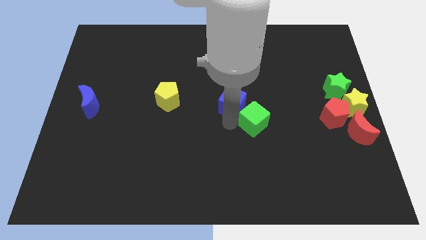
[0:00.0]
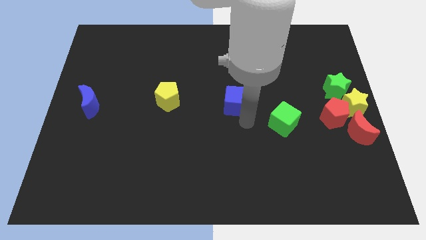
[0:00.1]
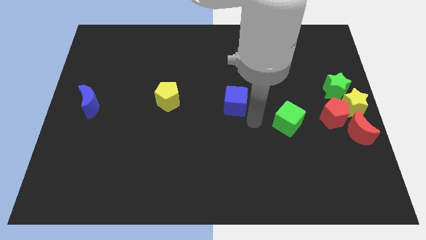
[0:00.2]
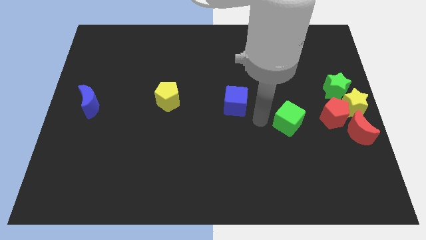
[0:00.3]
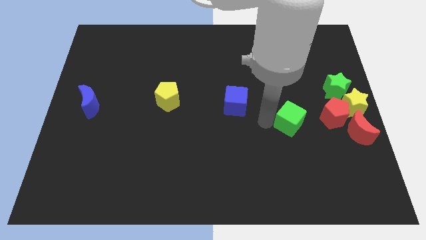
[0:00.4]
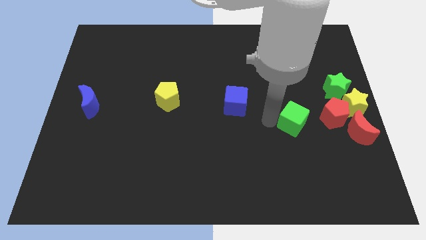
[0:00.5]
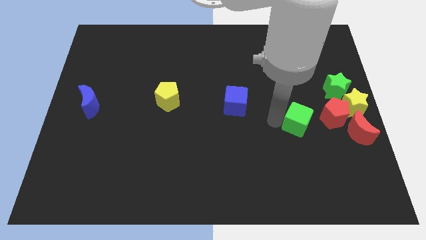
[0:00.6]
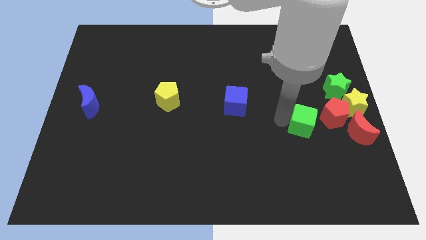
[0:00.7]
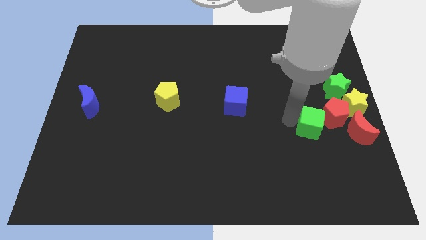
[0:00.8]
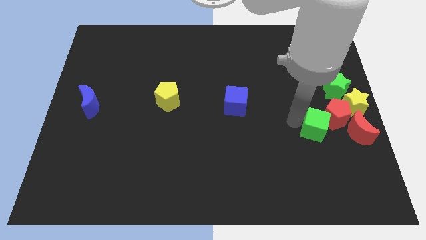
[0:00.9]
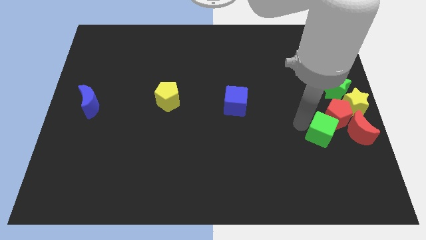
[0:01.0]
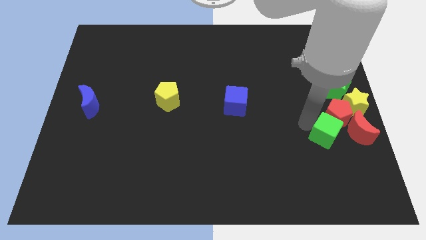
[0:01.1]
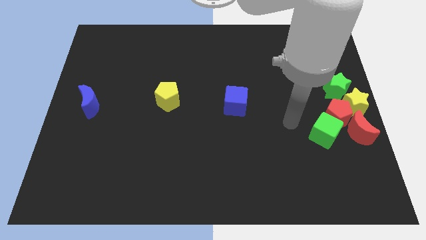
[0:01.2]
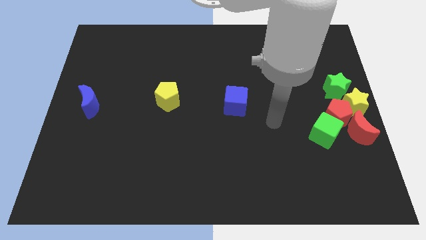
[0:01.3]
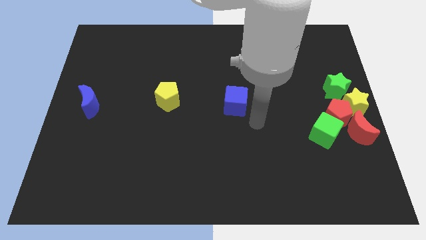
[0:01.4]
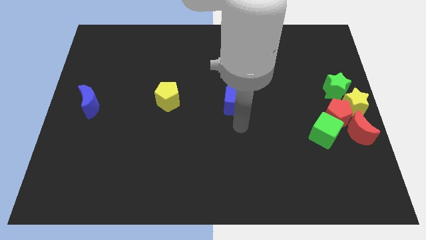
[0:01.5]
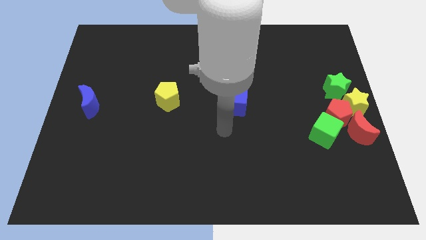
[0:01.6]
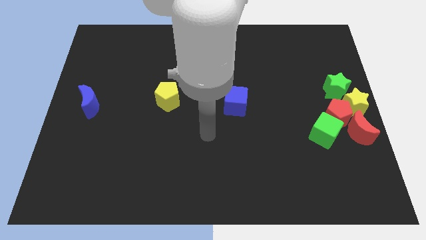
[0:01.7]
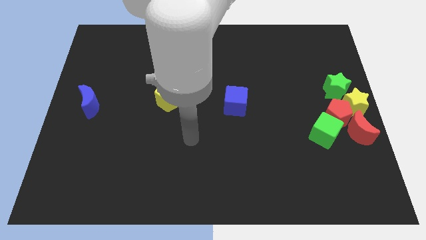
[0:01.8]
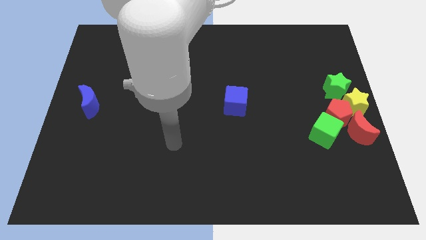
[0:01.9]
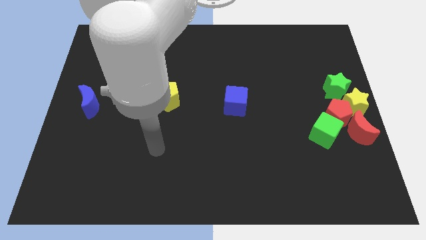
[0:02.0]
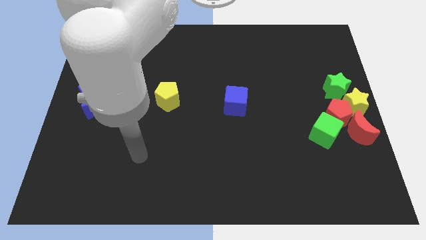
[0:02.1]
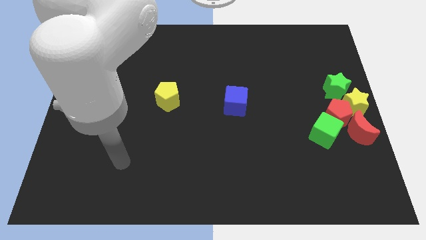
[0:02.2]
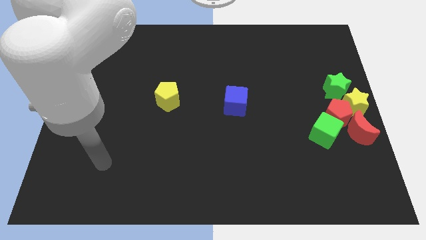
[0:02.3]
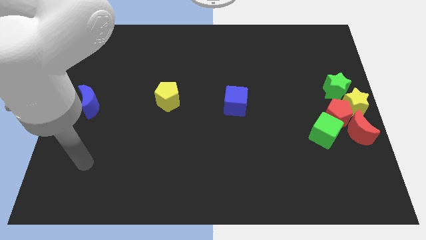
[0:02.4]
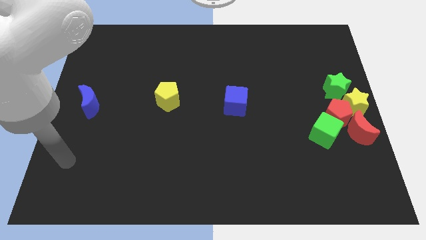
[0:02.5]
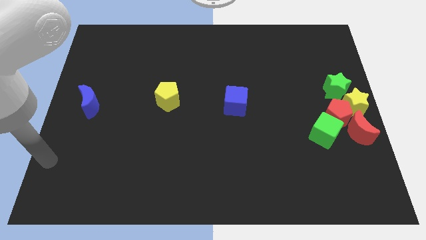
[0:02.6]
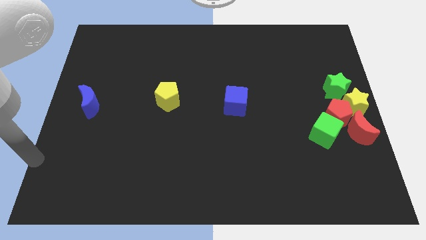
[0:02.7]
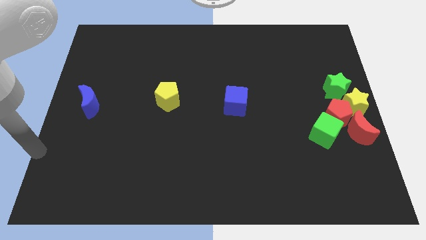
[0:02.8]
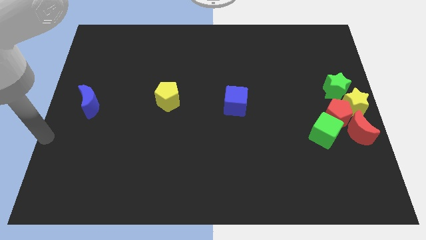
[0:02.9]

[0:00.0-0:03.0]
place the green cube close to the red pentagon

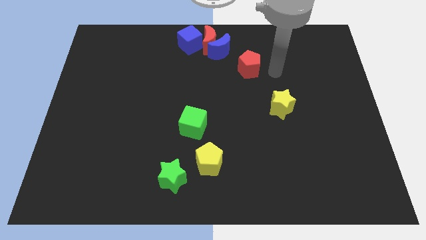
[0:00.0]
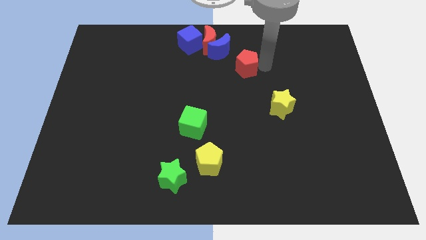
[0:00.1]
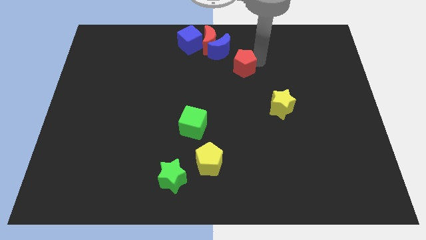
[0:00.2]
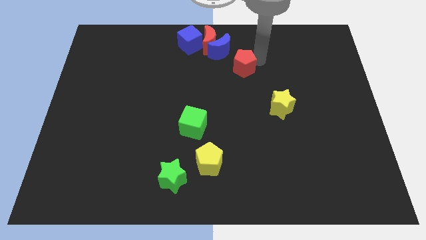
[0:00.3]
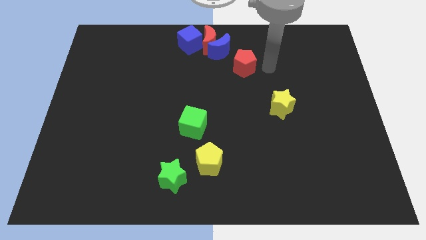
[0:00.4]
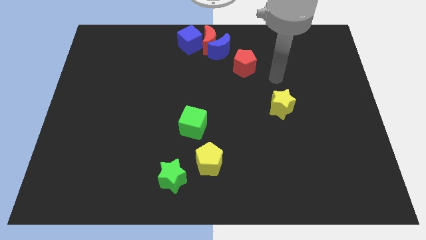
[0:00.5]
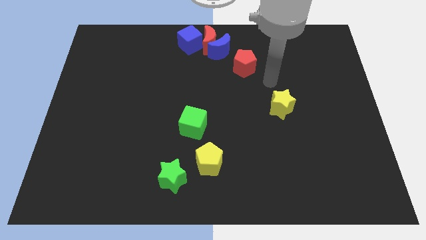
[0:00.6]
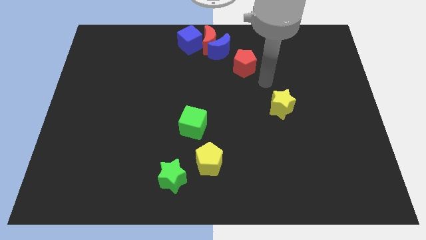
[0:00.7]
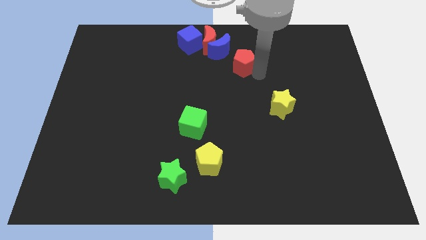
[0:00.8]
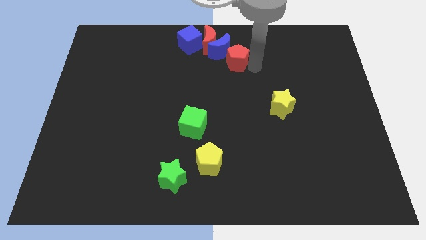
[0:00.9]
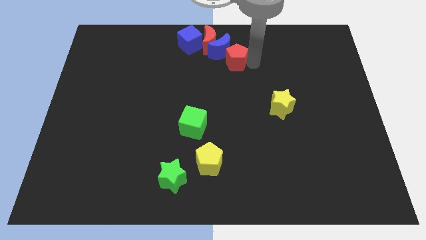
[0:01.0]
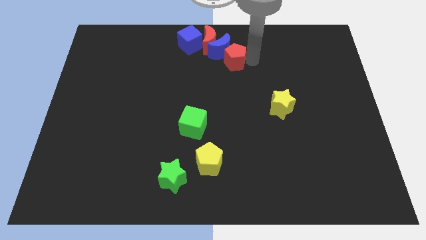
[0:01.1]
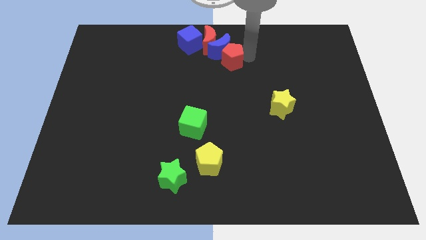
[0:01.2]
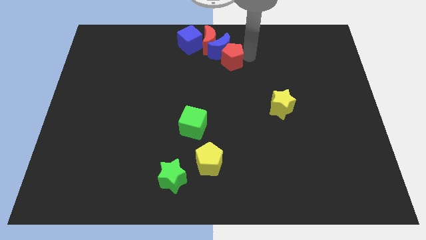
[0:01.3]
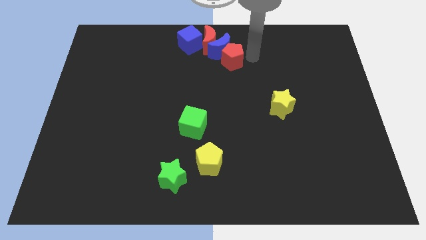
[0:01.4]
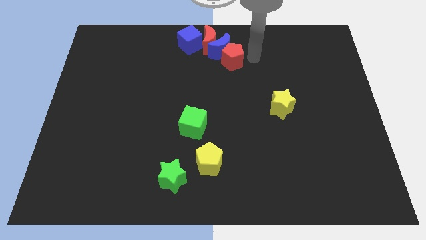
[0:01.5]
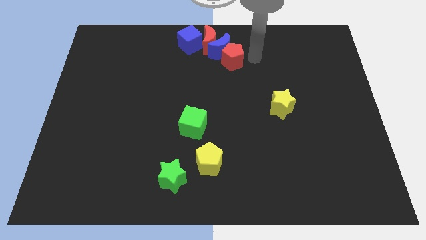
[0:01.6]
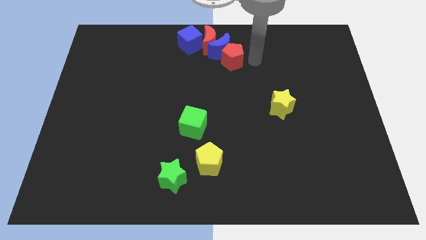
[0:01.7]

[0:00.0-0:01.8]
place the red pentagon below the blue moon

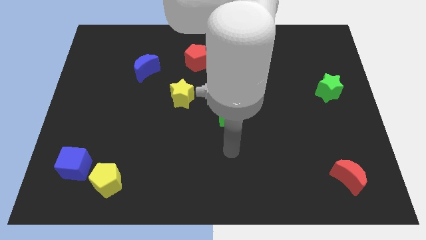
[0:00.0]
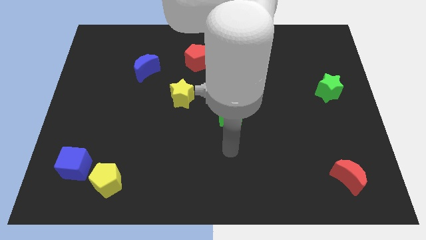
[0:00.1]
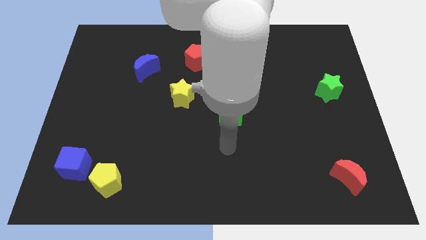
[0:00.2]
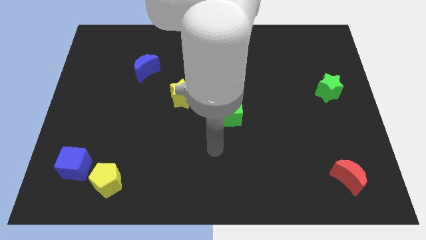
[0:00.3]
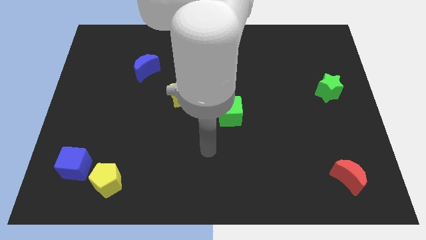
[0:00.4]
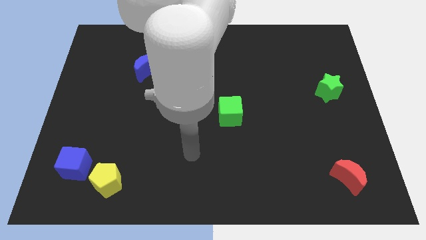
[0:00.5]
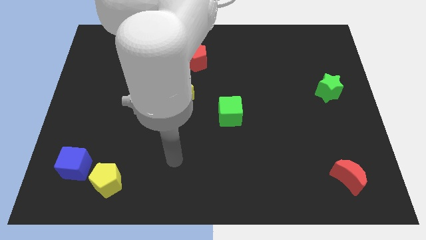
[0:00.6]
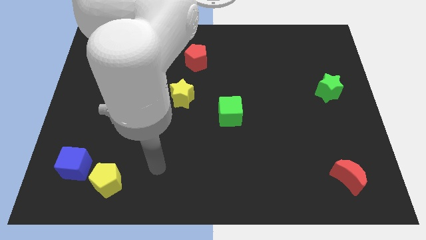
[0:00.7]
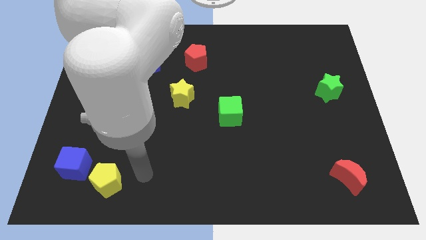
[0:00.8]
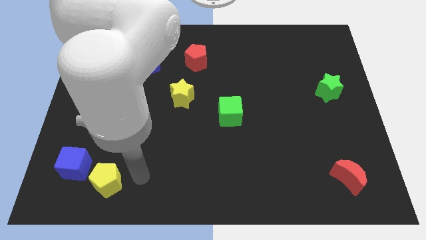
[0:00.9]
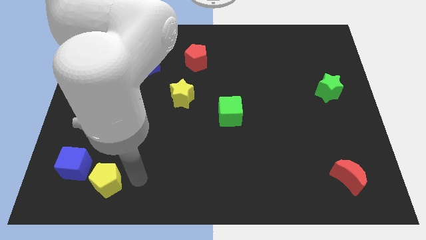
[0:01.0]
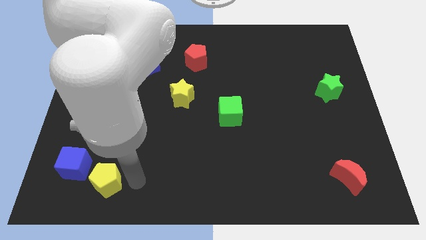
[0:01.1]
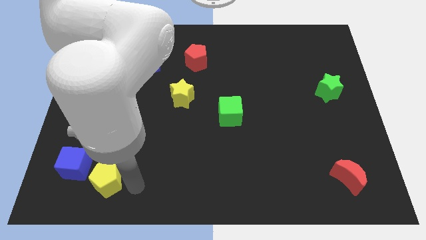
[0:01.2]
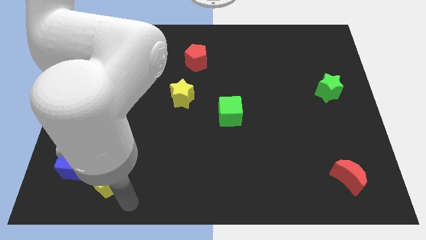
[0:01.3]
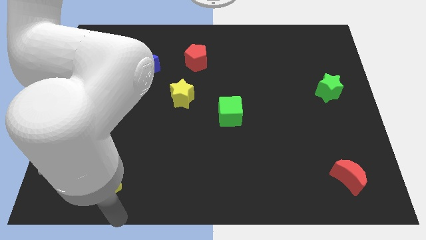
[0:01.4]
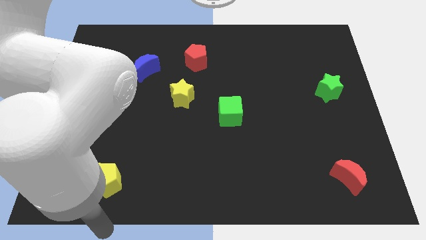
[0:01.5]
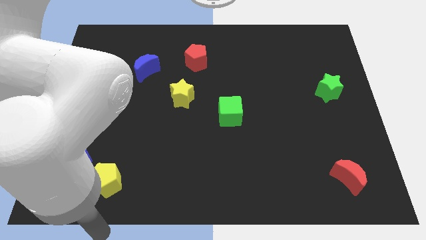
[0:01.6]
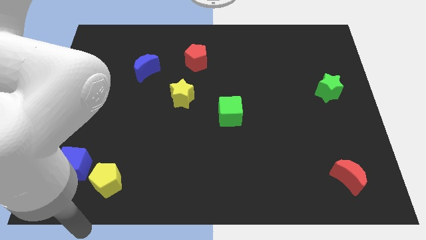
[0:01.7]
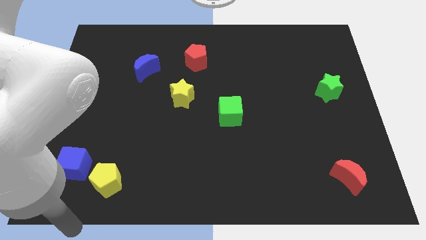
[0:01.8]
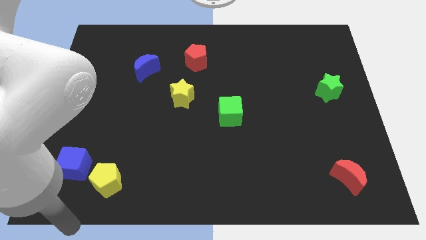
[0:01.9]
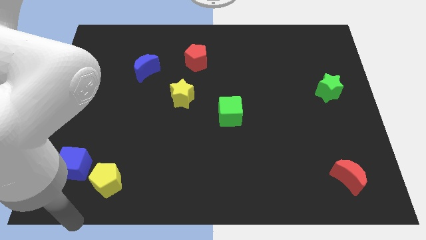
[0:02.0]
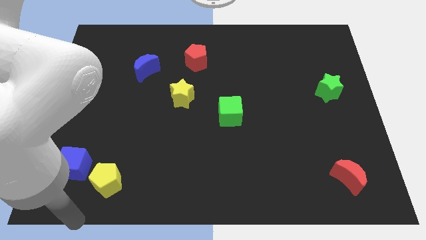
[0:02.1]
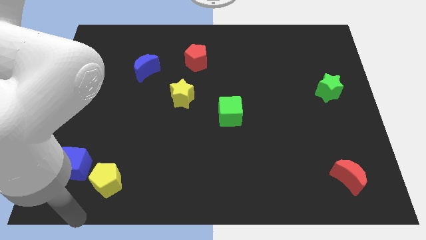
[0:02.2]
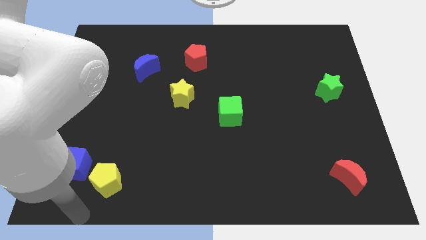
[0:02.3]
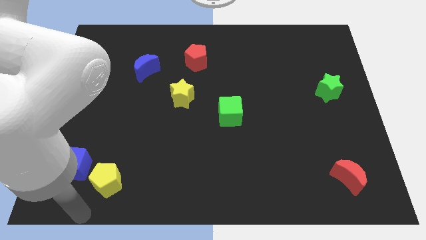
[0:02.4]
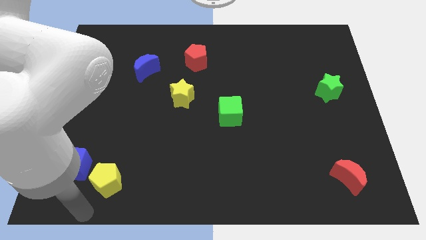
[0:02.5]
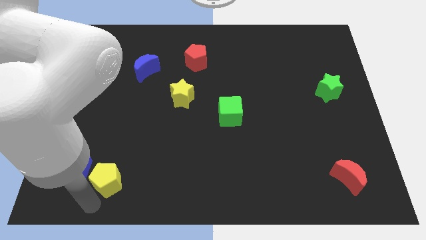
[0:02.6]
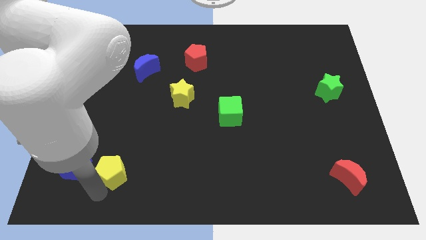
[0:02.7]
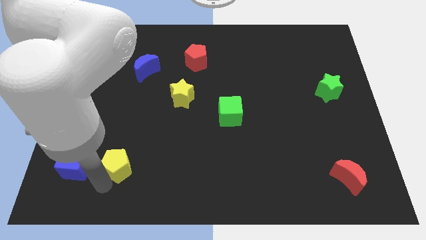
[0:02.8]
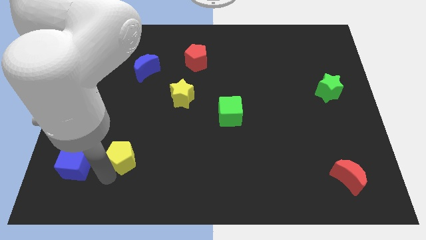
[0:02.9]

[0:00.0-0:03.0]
slightly touch the yellow pentagon from the bottom

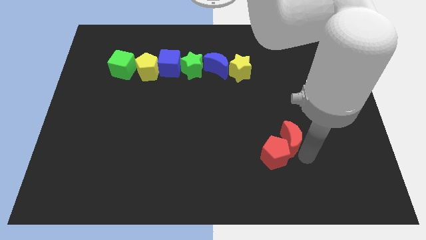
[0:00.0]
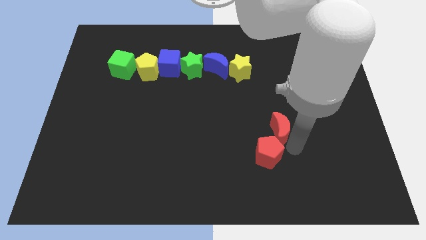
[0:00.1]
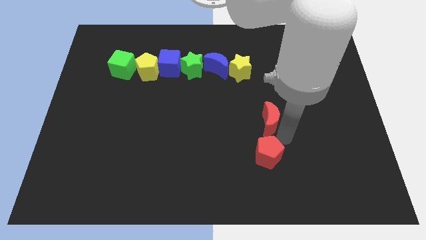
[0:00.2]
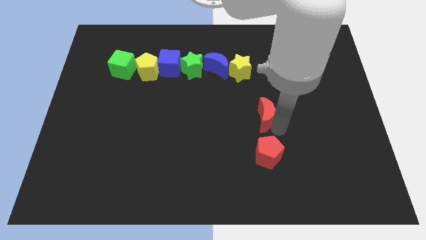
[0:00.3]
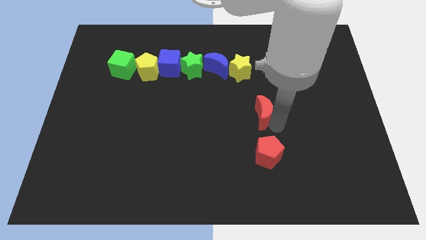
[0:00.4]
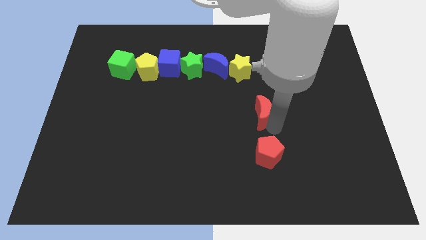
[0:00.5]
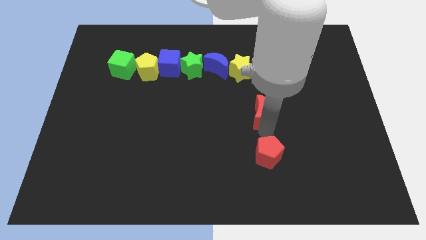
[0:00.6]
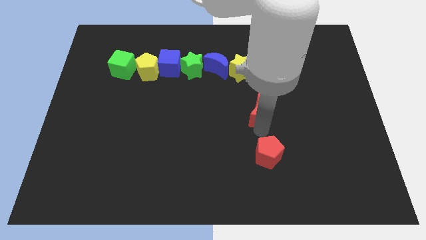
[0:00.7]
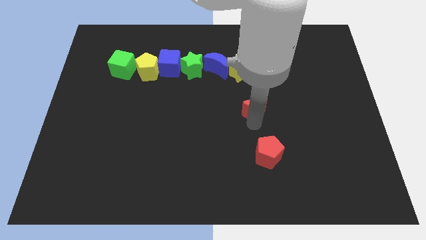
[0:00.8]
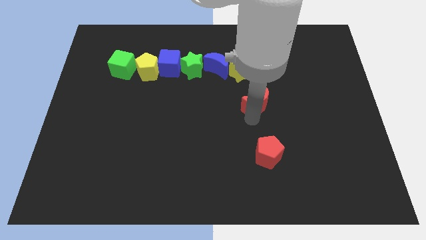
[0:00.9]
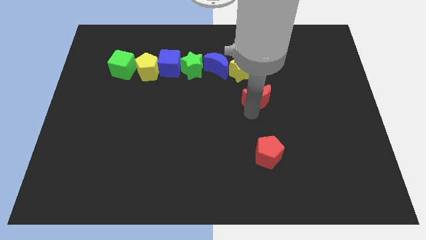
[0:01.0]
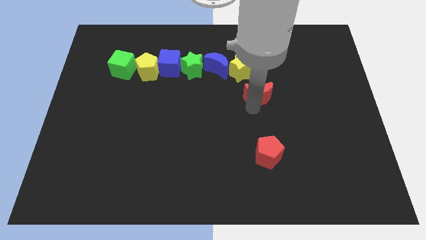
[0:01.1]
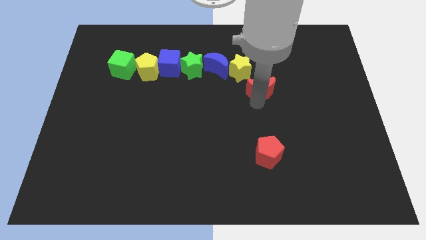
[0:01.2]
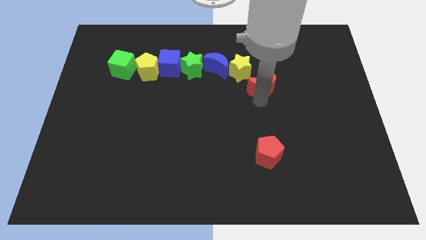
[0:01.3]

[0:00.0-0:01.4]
put the red moon diagonally bottom right to yellow star
